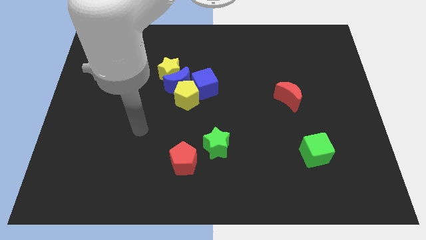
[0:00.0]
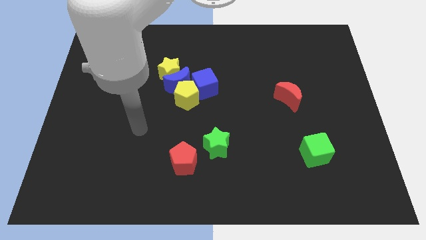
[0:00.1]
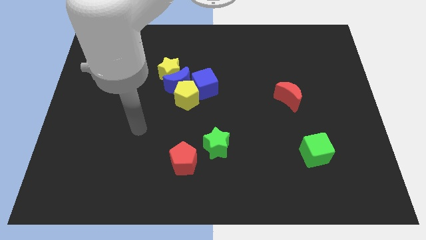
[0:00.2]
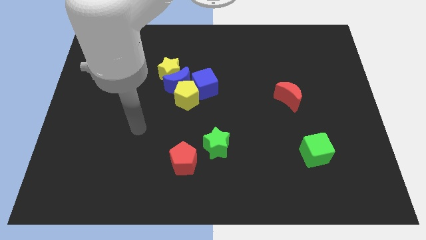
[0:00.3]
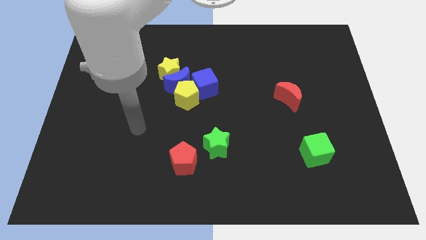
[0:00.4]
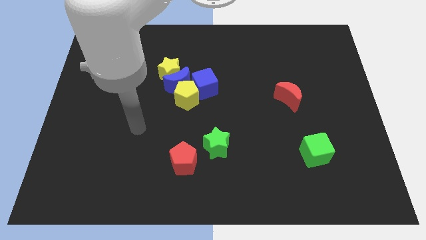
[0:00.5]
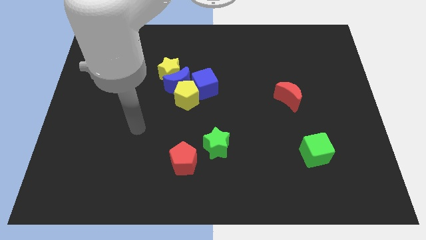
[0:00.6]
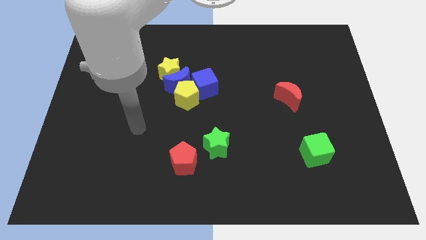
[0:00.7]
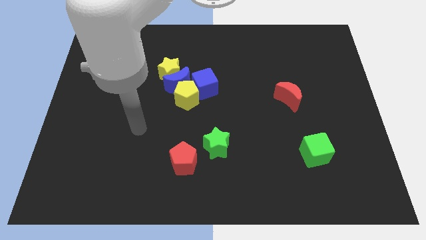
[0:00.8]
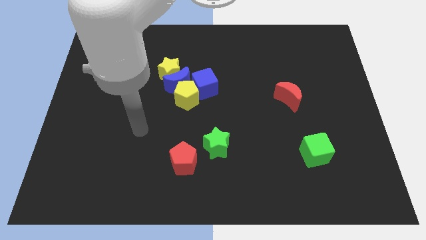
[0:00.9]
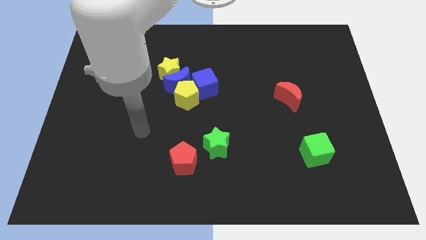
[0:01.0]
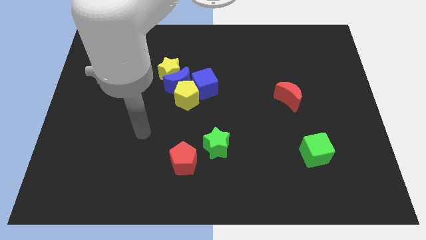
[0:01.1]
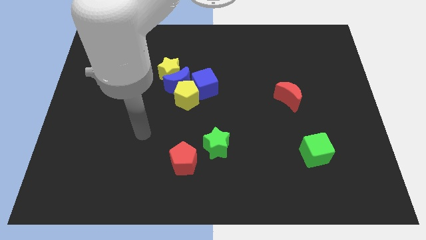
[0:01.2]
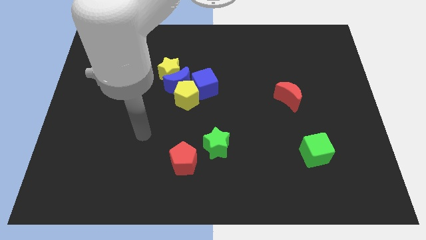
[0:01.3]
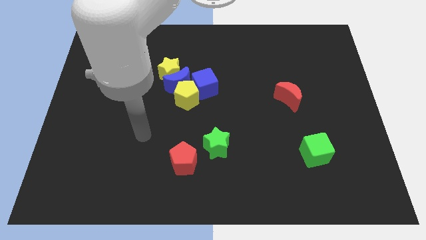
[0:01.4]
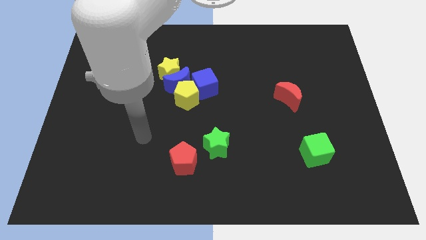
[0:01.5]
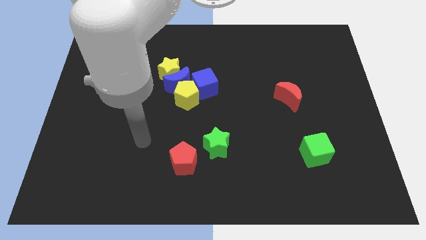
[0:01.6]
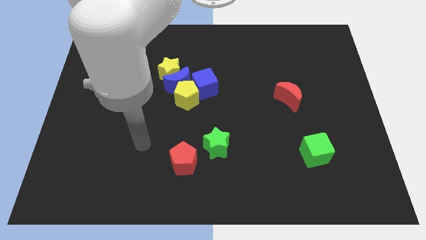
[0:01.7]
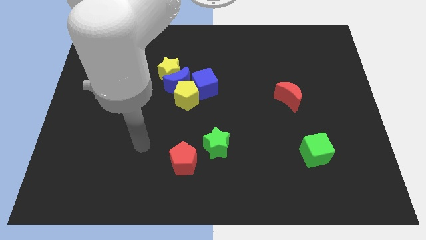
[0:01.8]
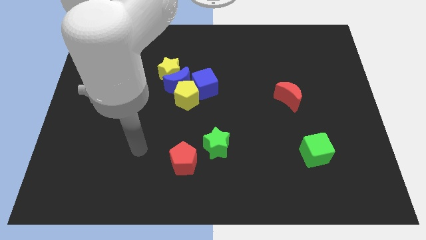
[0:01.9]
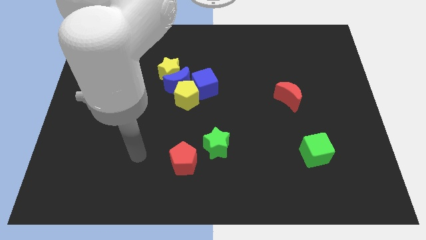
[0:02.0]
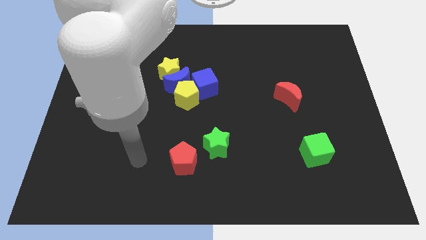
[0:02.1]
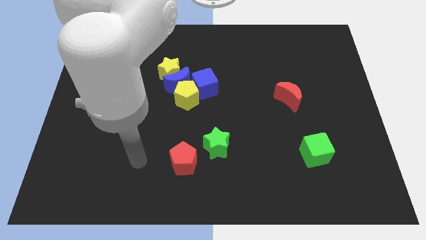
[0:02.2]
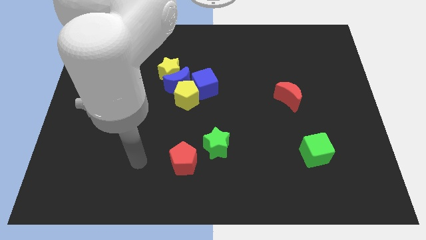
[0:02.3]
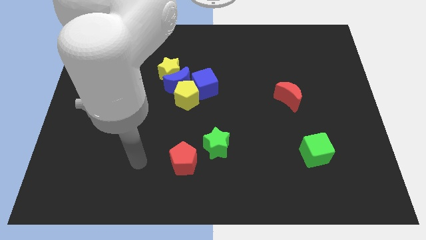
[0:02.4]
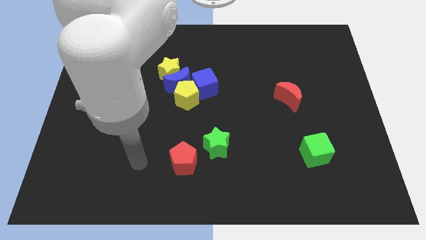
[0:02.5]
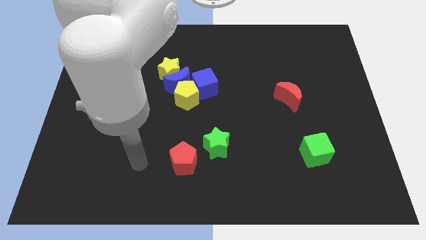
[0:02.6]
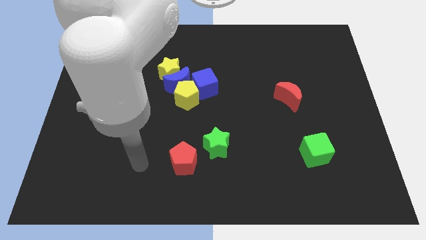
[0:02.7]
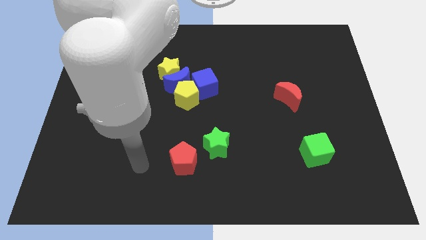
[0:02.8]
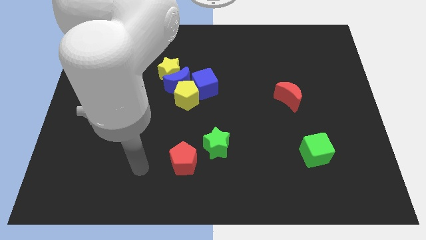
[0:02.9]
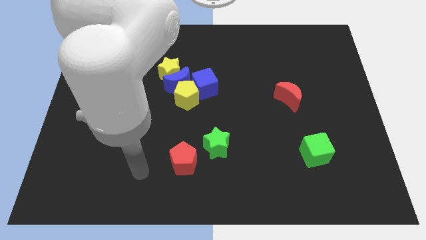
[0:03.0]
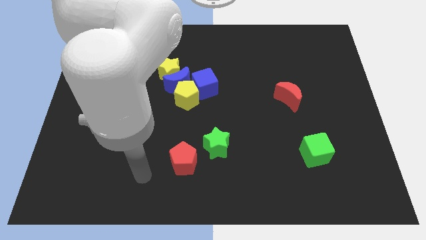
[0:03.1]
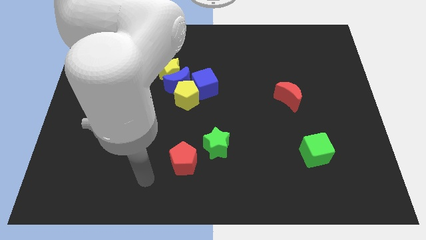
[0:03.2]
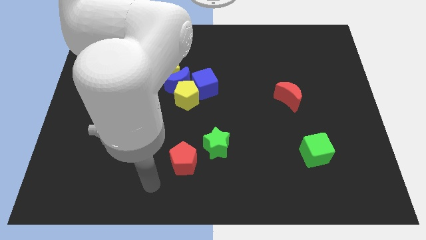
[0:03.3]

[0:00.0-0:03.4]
drag your arm to the bottom

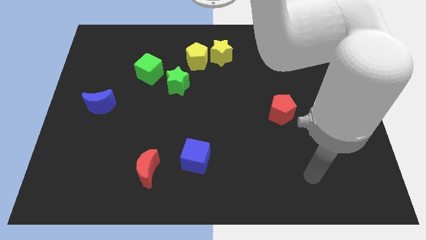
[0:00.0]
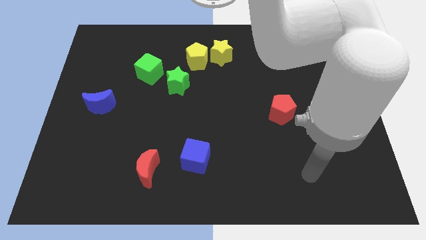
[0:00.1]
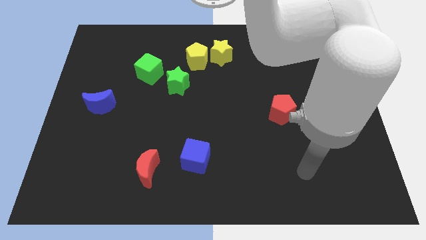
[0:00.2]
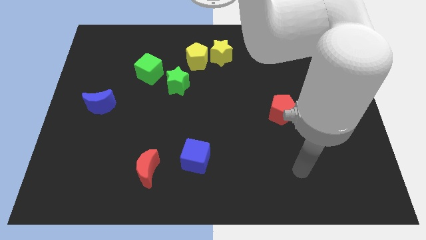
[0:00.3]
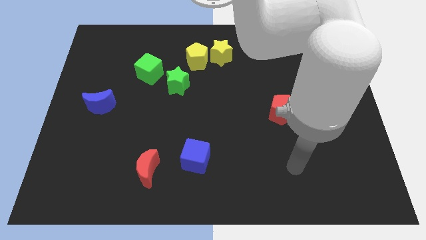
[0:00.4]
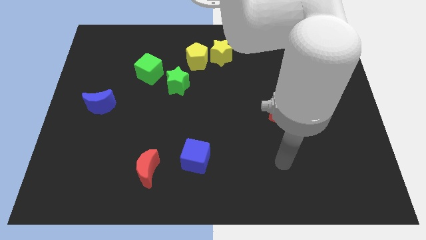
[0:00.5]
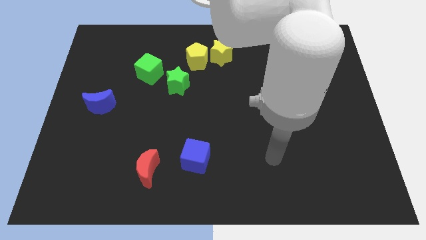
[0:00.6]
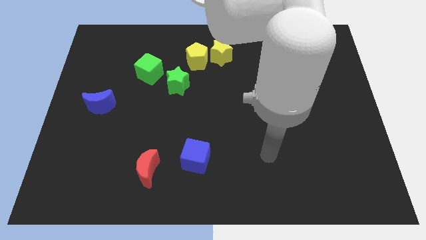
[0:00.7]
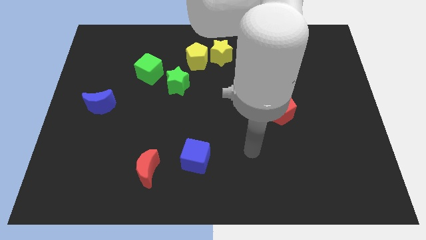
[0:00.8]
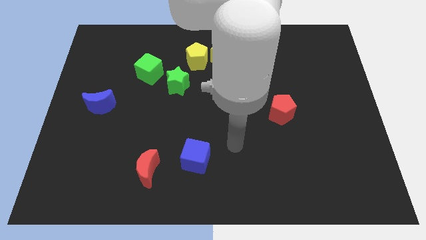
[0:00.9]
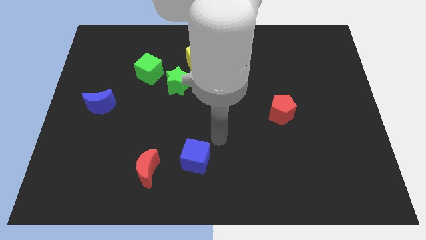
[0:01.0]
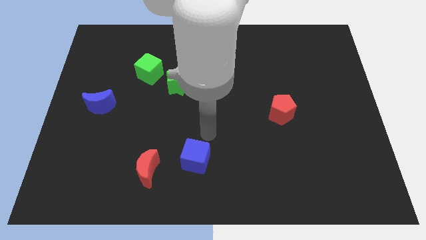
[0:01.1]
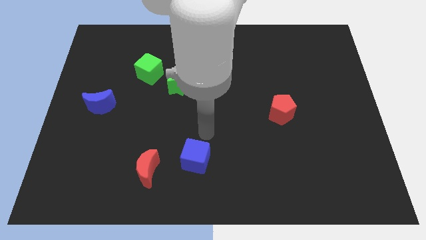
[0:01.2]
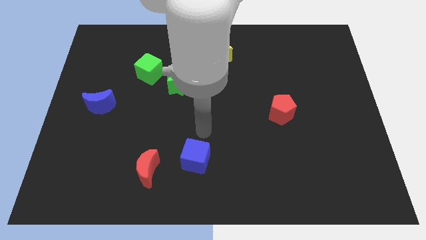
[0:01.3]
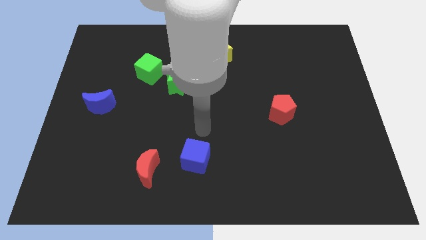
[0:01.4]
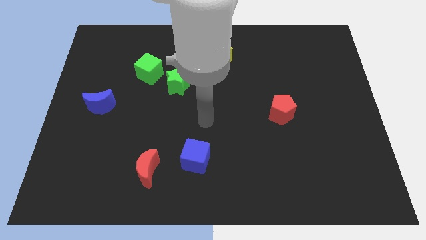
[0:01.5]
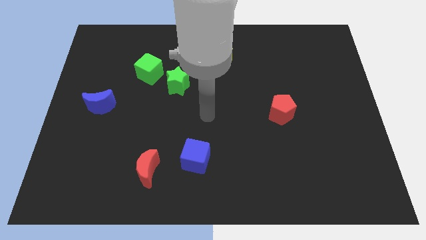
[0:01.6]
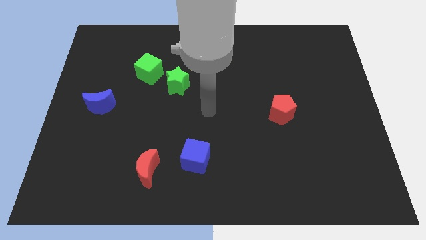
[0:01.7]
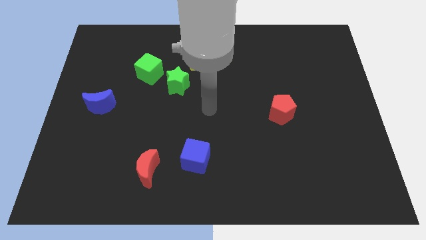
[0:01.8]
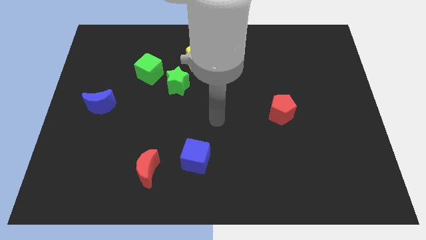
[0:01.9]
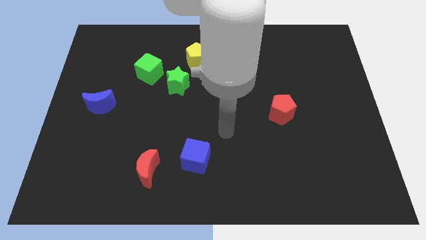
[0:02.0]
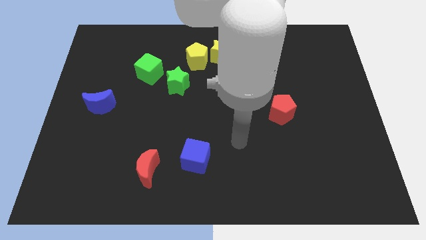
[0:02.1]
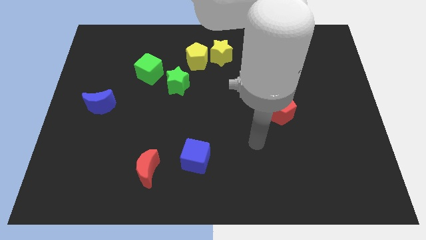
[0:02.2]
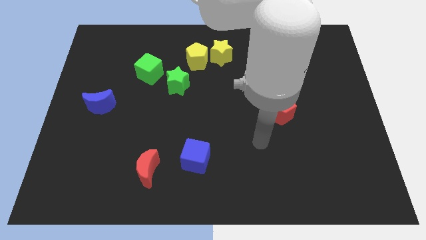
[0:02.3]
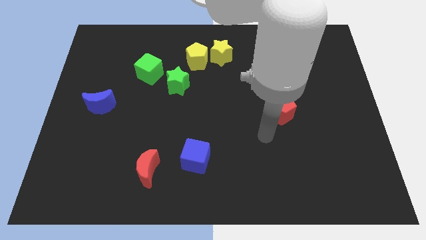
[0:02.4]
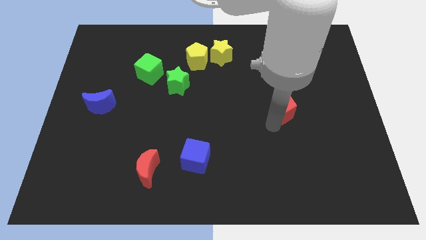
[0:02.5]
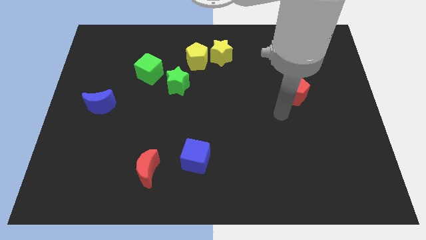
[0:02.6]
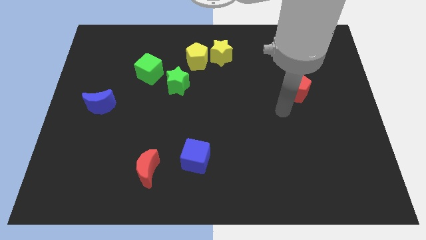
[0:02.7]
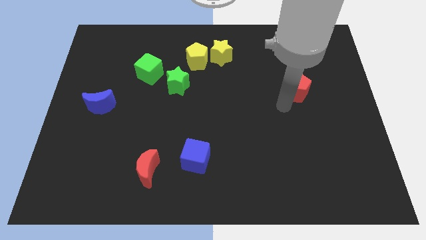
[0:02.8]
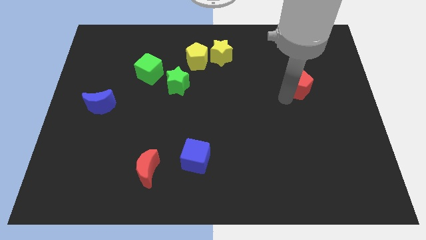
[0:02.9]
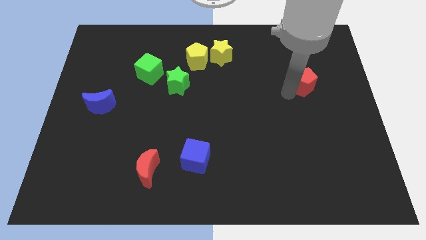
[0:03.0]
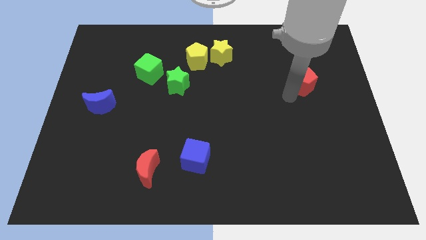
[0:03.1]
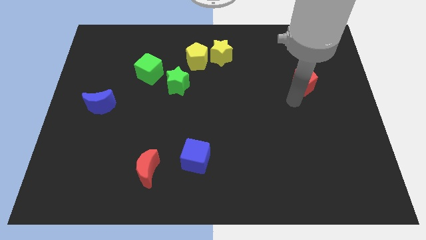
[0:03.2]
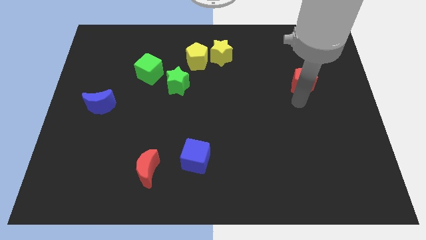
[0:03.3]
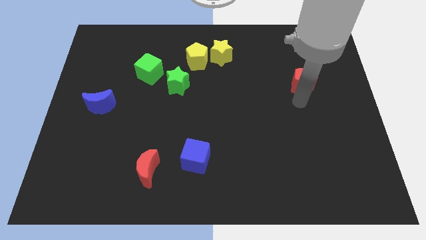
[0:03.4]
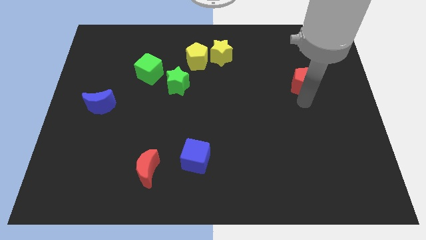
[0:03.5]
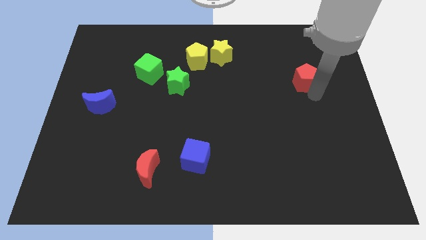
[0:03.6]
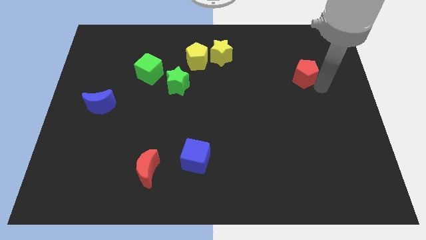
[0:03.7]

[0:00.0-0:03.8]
slide the red pentagon towards the top side of the board

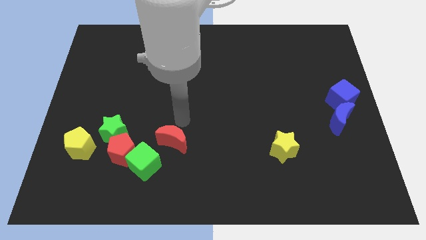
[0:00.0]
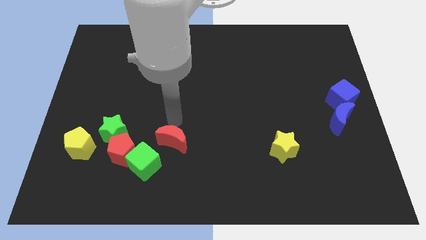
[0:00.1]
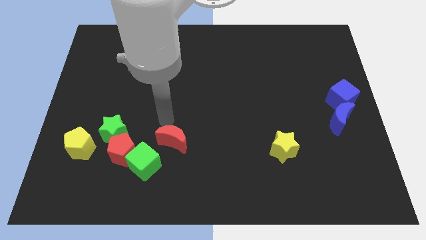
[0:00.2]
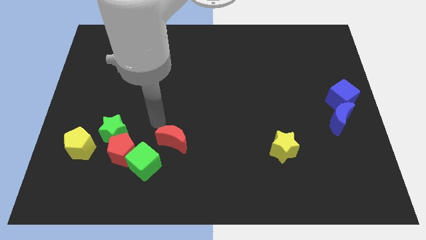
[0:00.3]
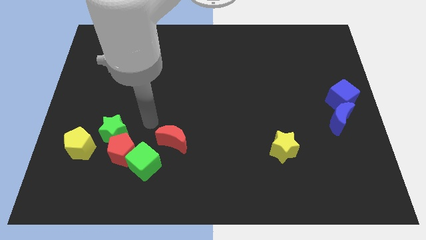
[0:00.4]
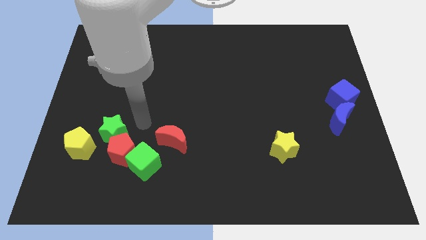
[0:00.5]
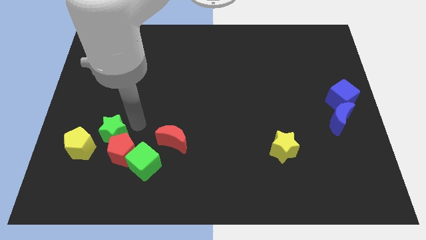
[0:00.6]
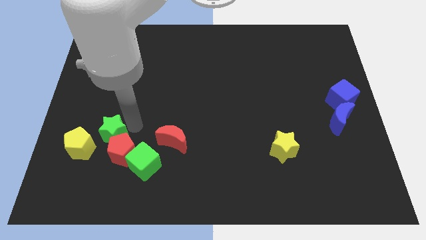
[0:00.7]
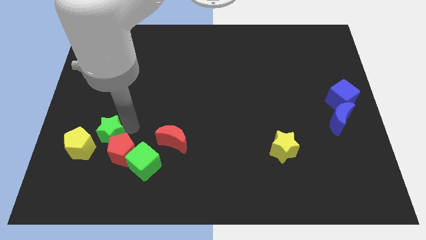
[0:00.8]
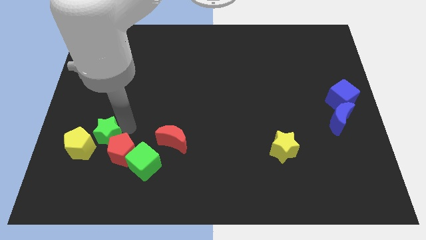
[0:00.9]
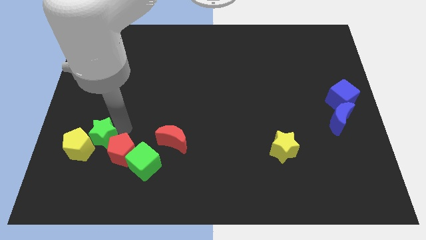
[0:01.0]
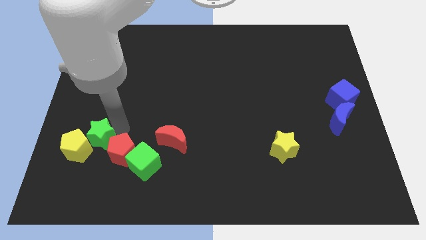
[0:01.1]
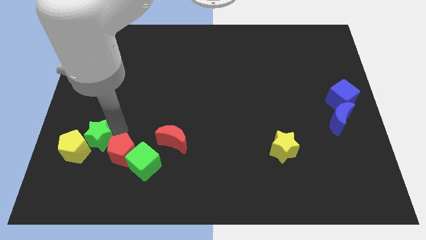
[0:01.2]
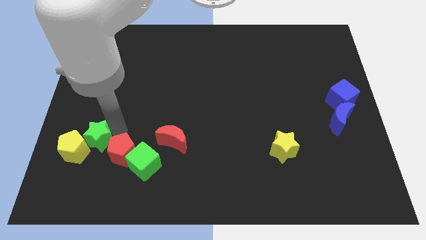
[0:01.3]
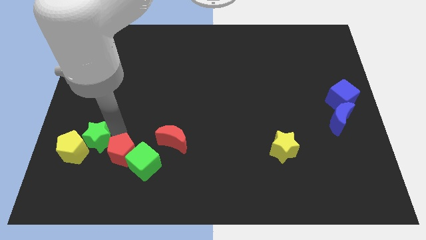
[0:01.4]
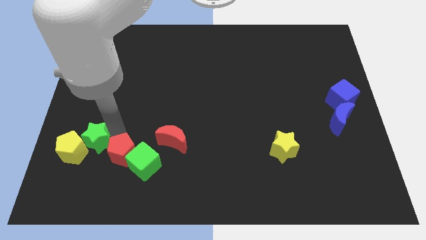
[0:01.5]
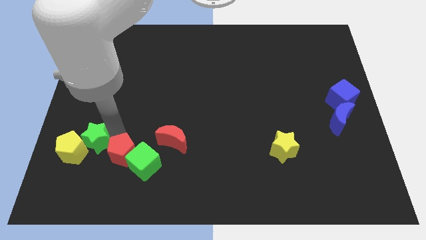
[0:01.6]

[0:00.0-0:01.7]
push green star in to yellow pentagon

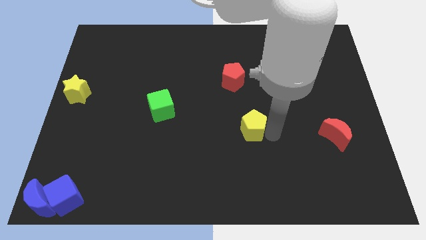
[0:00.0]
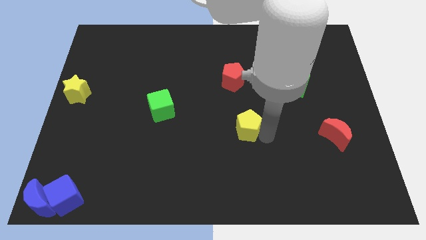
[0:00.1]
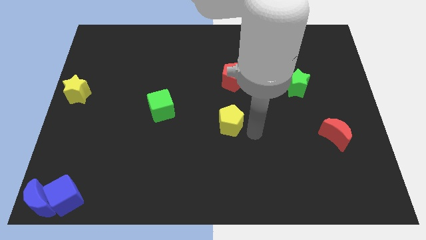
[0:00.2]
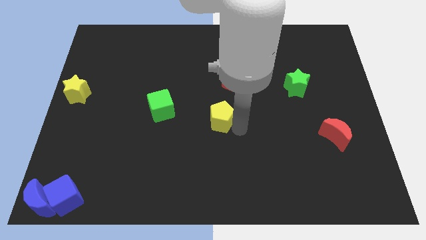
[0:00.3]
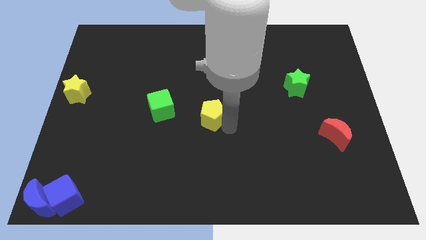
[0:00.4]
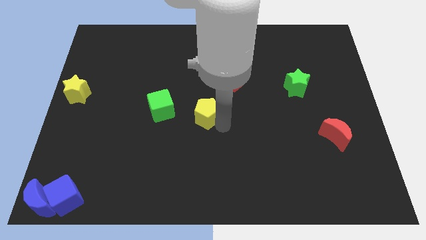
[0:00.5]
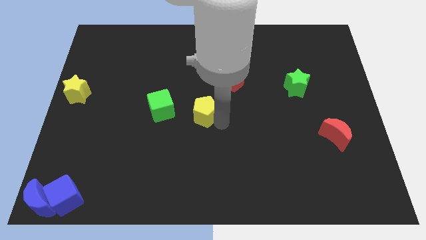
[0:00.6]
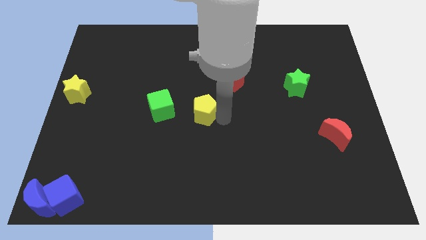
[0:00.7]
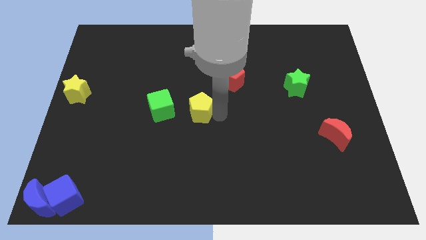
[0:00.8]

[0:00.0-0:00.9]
place the yellow pentagon towards the centre of the board
